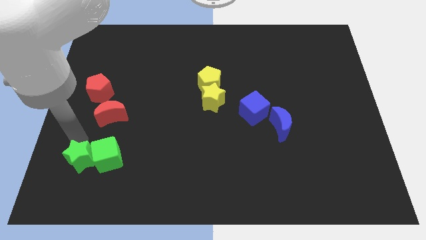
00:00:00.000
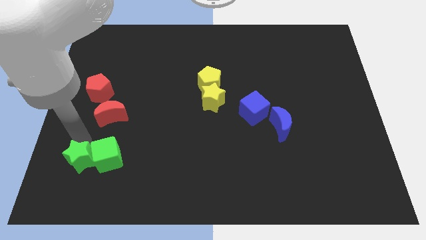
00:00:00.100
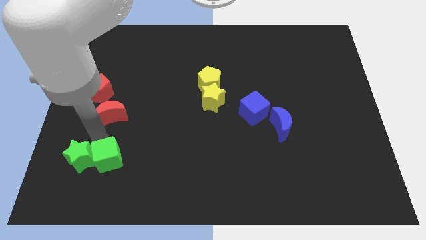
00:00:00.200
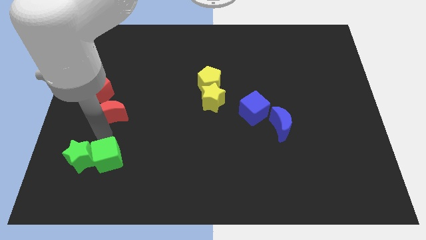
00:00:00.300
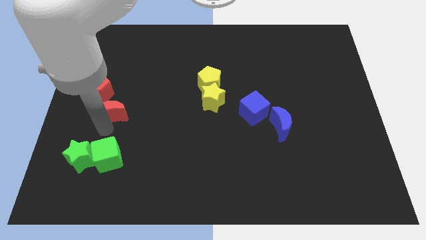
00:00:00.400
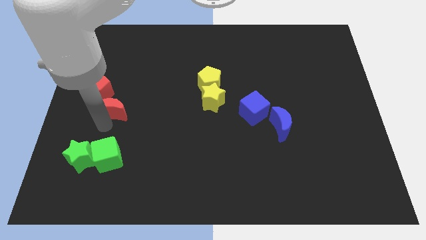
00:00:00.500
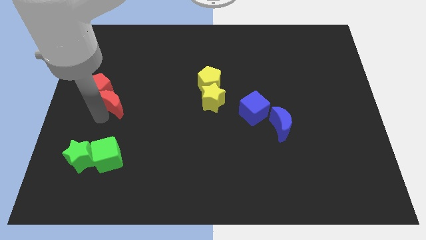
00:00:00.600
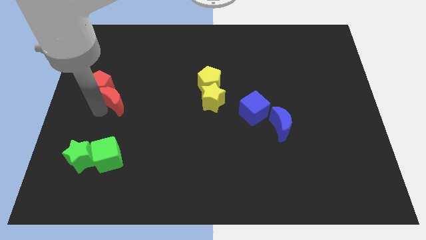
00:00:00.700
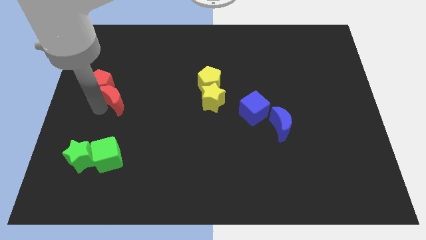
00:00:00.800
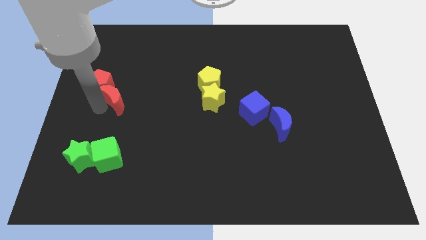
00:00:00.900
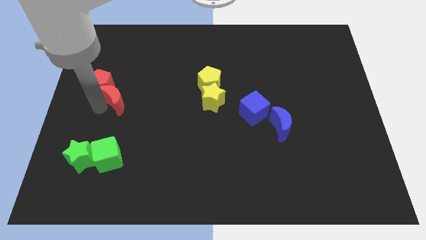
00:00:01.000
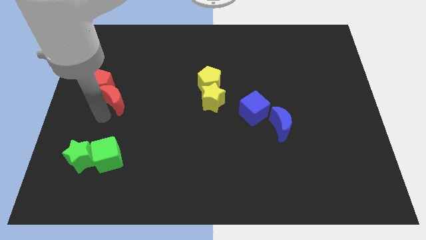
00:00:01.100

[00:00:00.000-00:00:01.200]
push the red crescent below the red pentagon

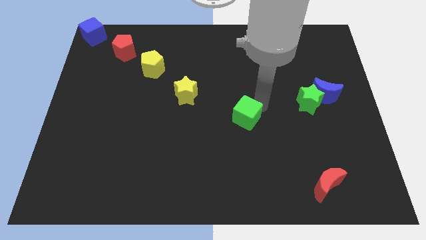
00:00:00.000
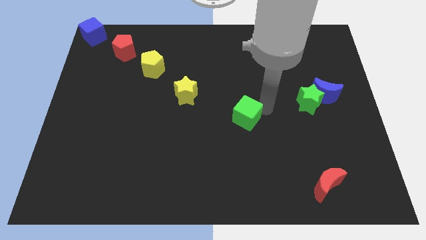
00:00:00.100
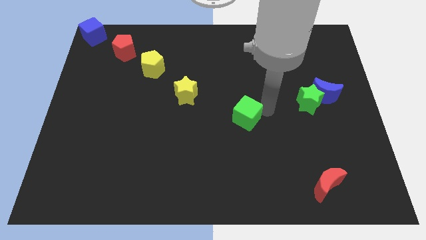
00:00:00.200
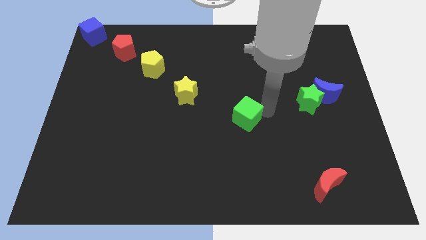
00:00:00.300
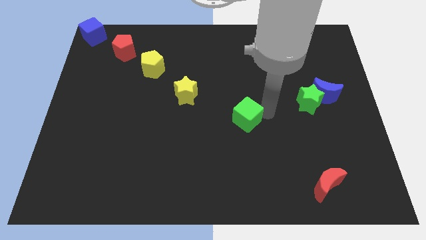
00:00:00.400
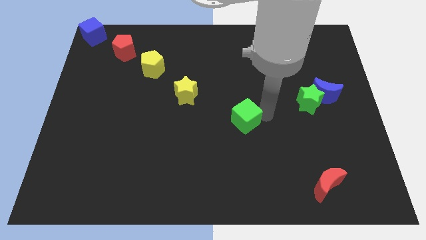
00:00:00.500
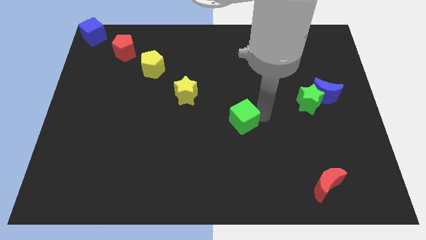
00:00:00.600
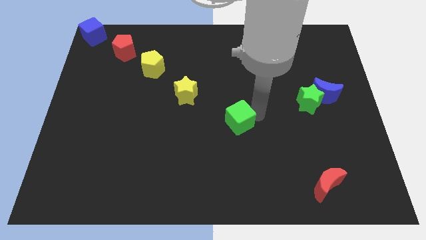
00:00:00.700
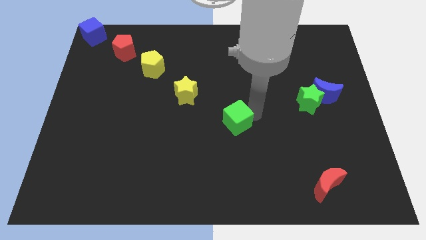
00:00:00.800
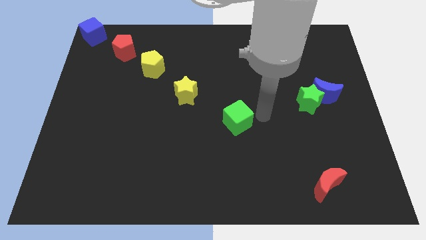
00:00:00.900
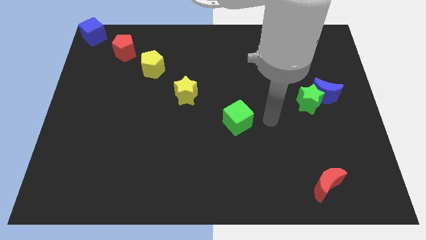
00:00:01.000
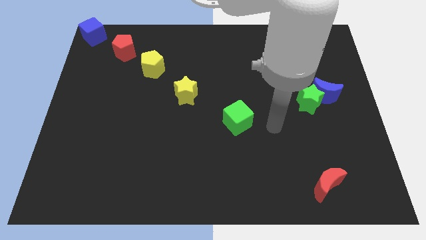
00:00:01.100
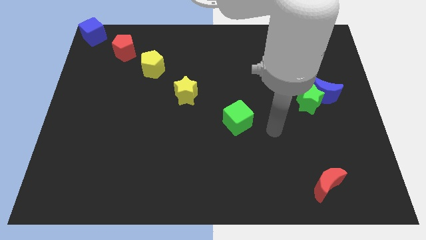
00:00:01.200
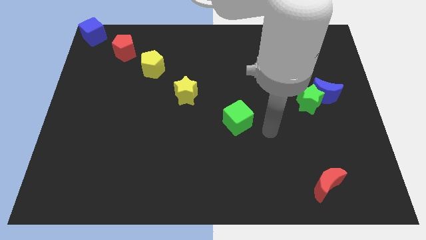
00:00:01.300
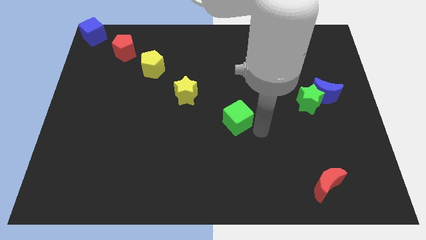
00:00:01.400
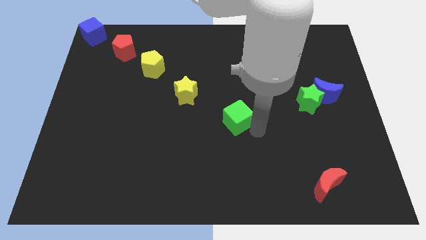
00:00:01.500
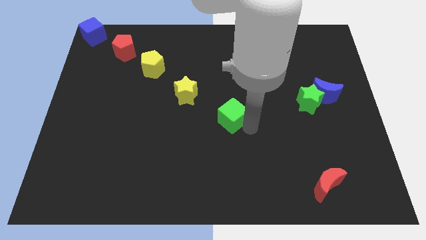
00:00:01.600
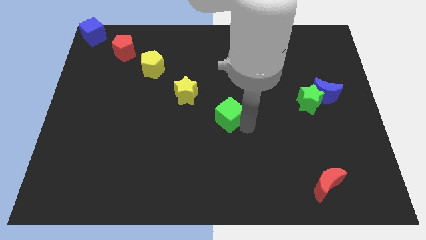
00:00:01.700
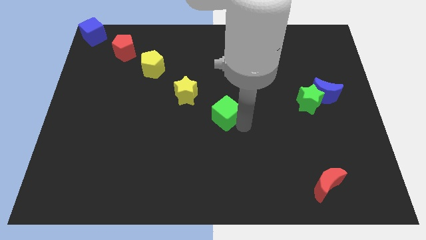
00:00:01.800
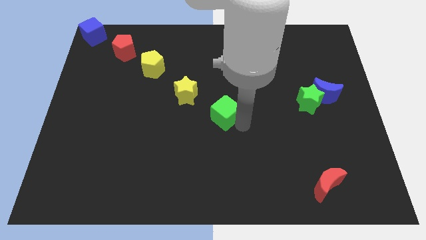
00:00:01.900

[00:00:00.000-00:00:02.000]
move the green cube near to the yellow star

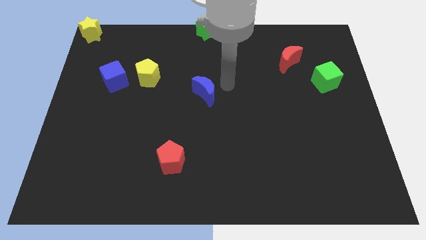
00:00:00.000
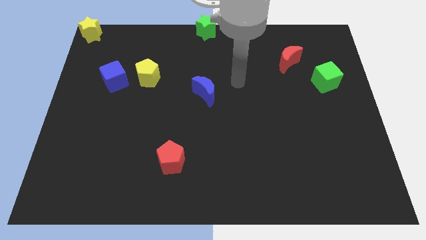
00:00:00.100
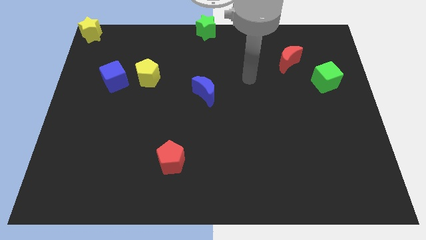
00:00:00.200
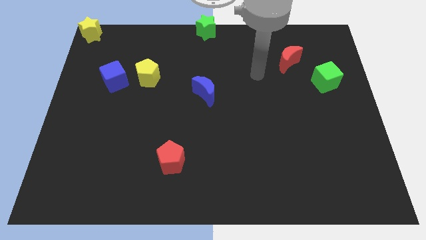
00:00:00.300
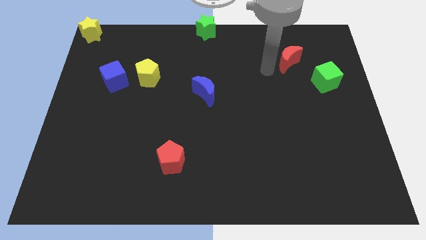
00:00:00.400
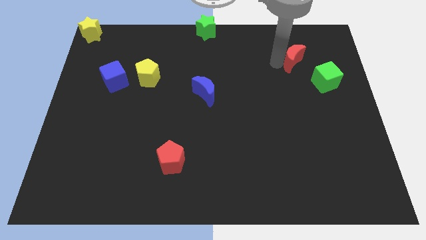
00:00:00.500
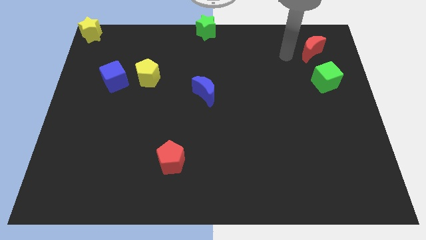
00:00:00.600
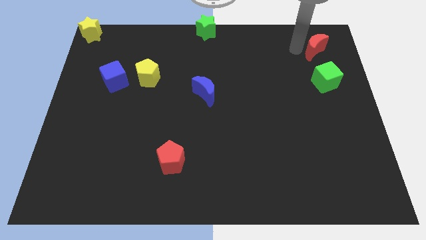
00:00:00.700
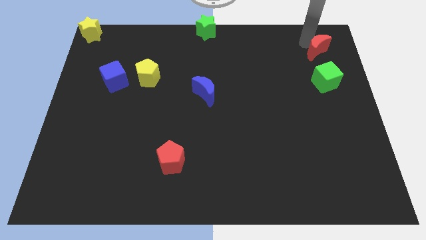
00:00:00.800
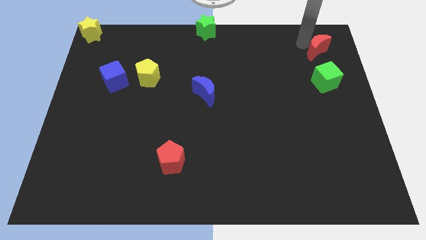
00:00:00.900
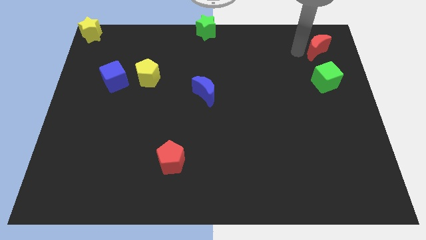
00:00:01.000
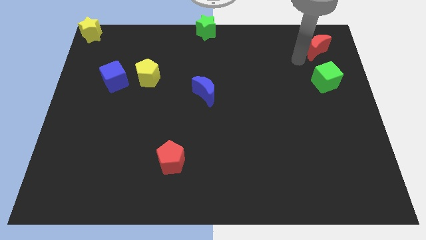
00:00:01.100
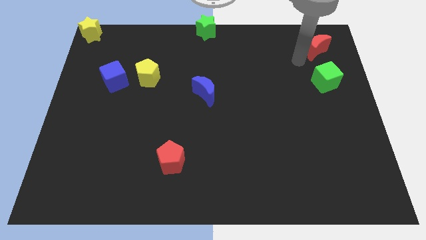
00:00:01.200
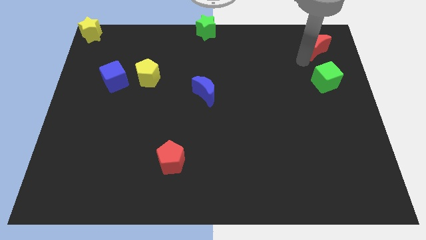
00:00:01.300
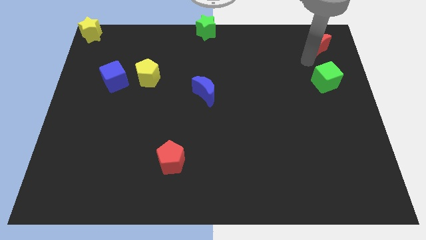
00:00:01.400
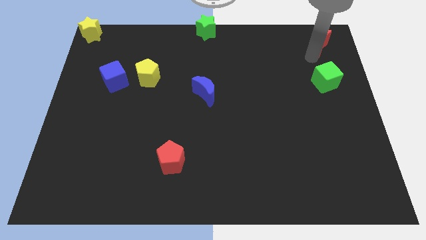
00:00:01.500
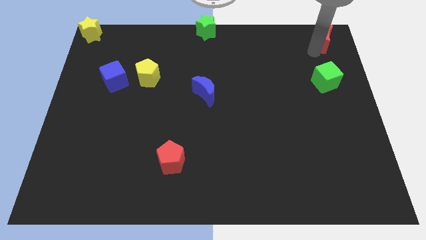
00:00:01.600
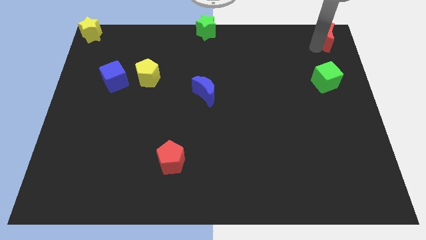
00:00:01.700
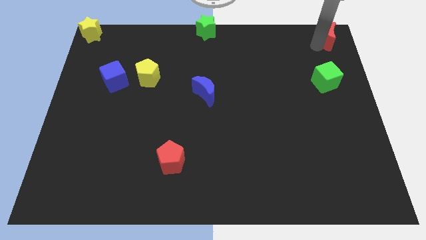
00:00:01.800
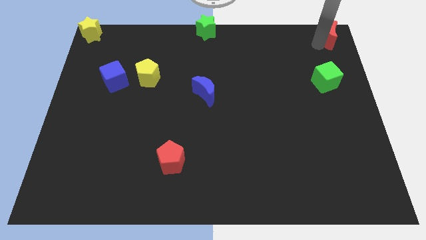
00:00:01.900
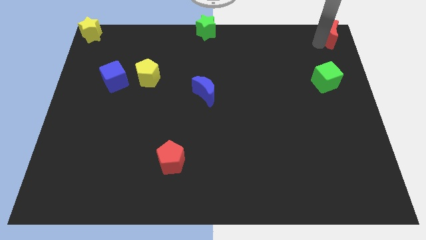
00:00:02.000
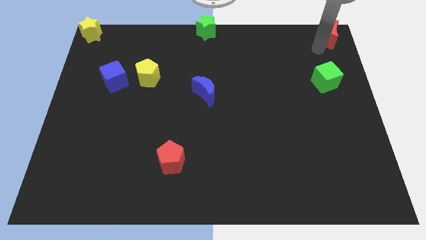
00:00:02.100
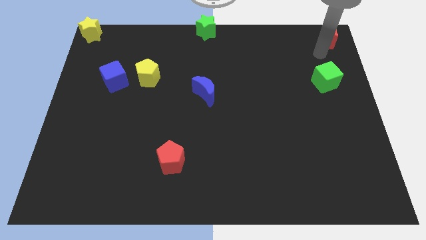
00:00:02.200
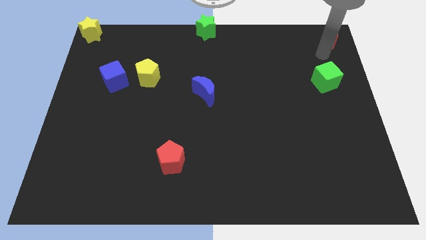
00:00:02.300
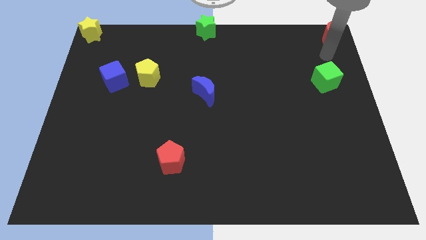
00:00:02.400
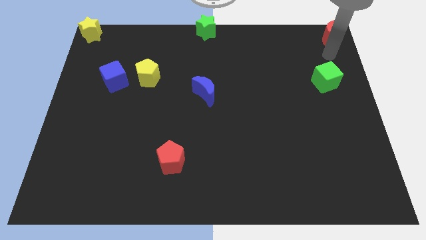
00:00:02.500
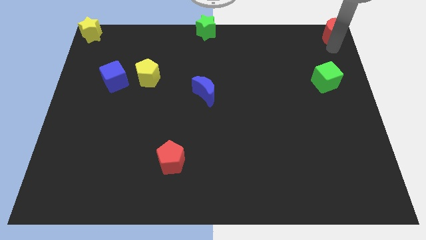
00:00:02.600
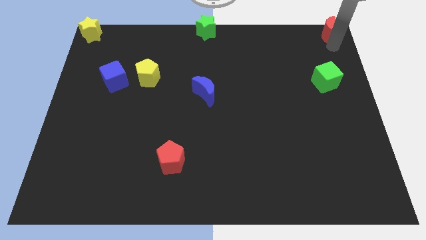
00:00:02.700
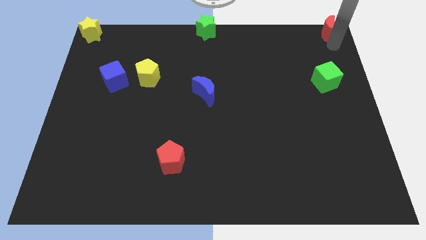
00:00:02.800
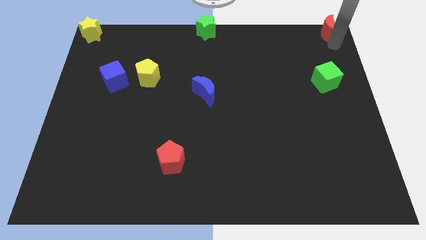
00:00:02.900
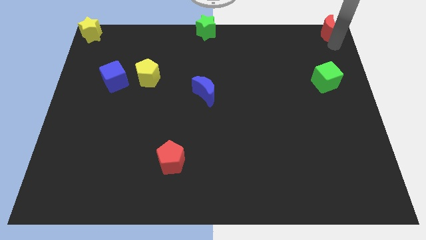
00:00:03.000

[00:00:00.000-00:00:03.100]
move the red moon towards the top right corner

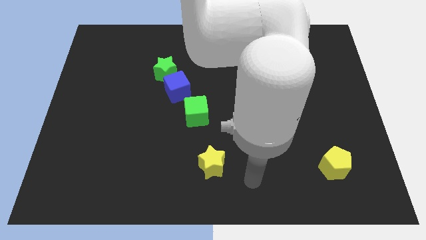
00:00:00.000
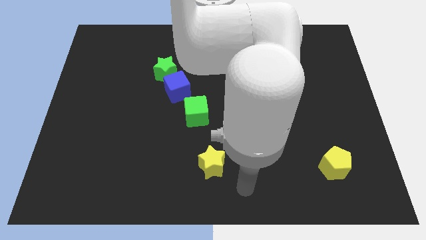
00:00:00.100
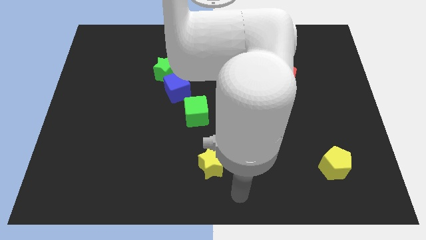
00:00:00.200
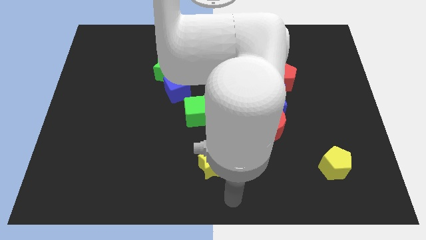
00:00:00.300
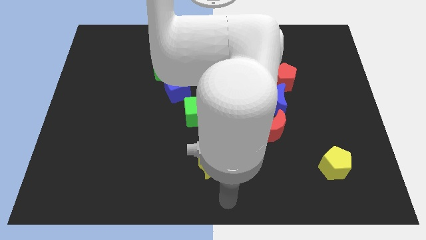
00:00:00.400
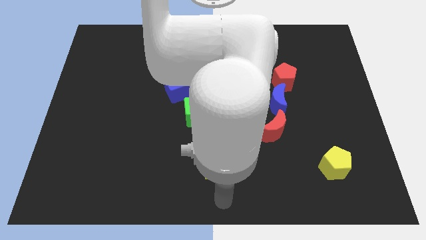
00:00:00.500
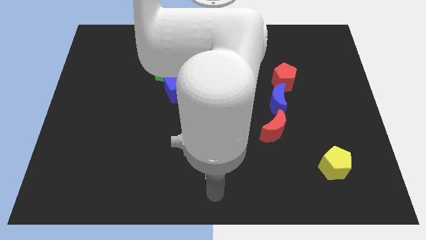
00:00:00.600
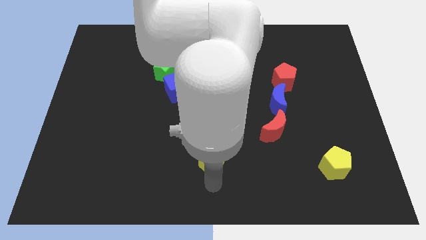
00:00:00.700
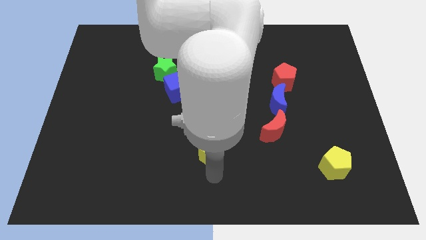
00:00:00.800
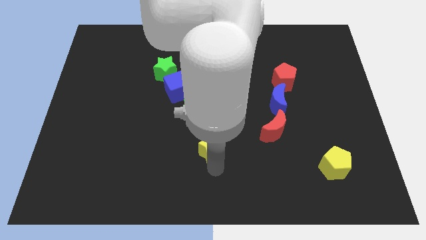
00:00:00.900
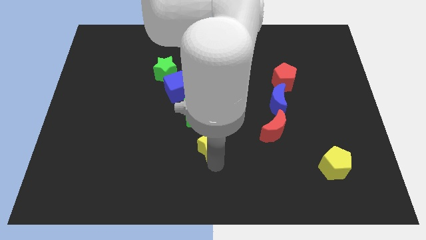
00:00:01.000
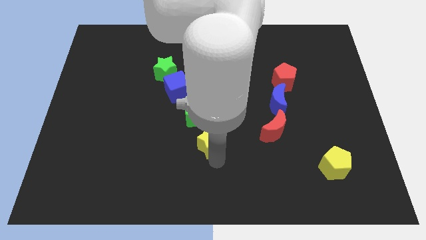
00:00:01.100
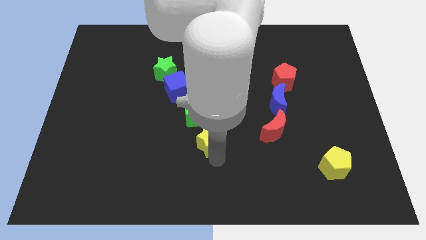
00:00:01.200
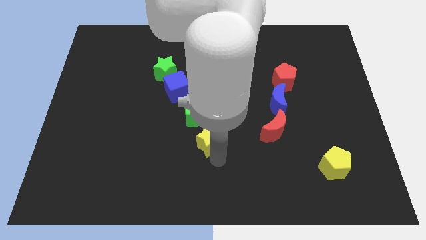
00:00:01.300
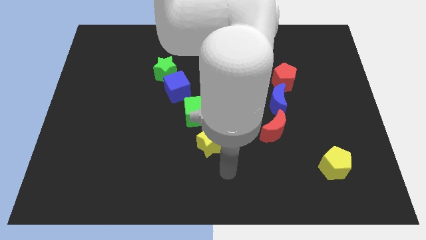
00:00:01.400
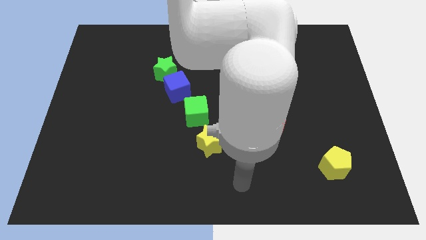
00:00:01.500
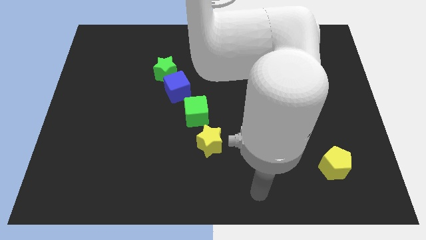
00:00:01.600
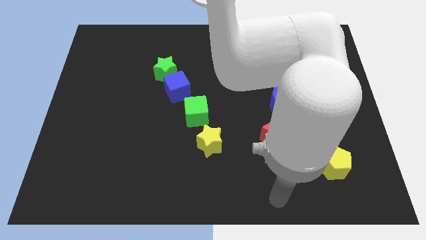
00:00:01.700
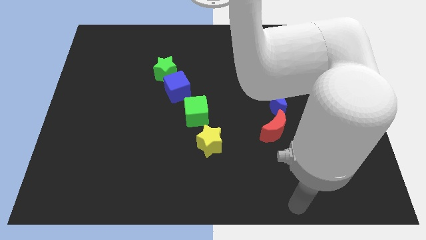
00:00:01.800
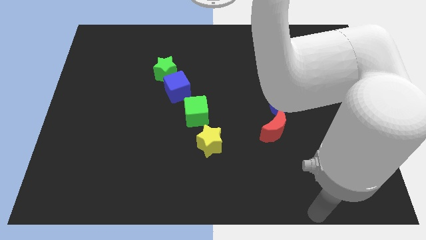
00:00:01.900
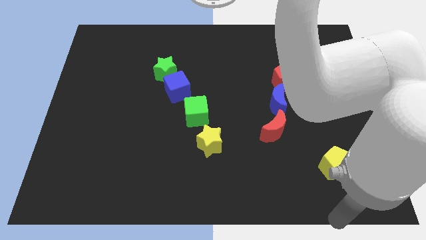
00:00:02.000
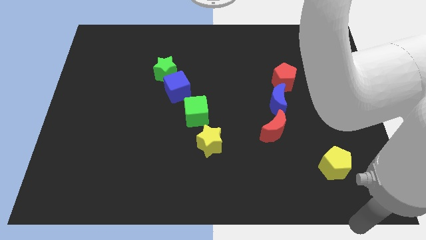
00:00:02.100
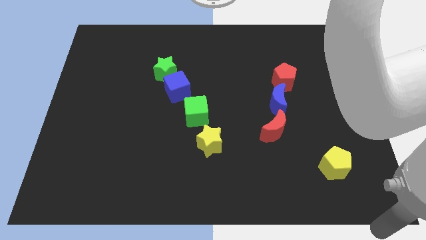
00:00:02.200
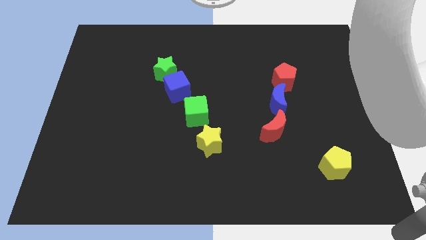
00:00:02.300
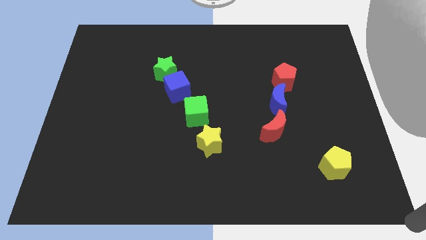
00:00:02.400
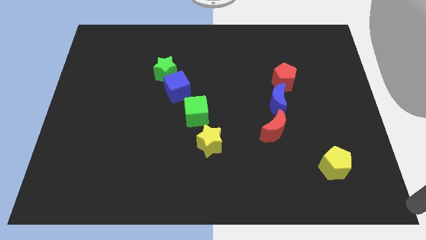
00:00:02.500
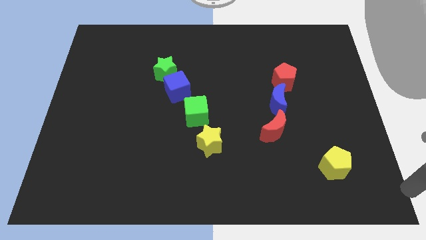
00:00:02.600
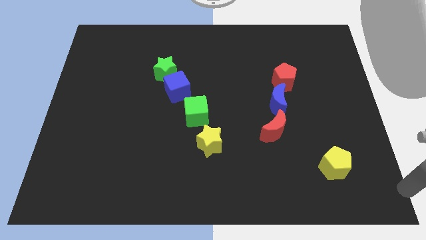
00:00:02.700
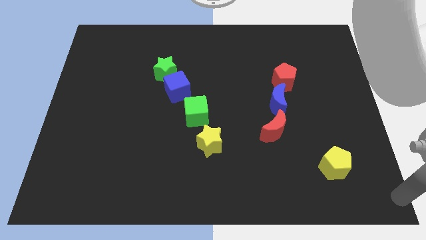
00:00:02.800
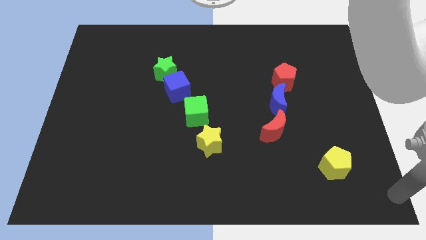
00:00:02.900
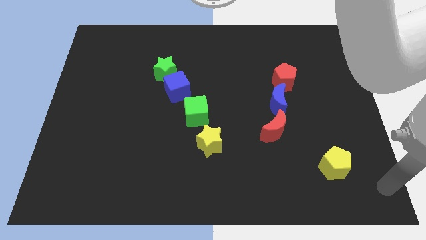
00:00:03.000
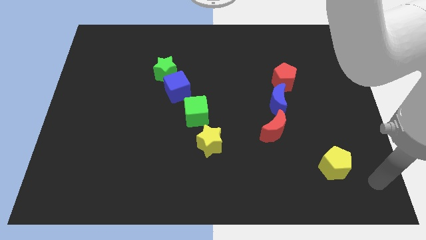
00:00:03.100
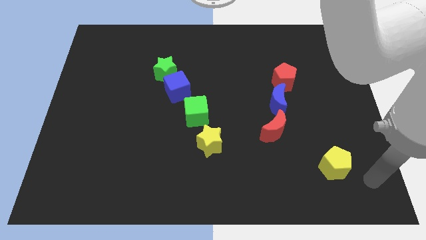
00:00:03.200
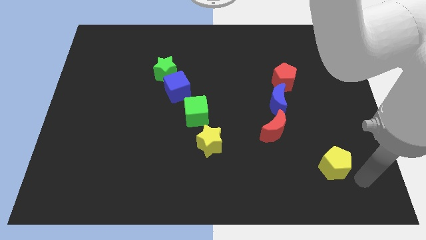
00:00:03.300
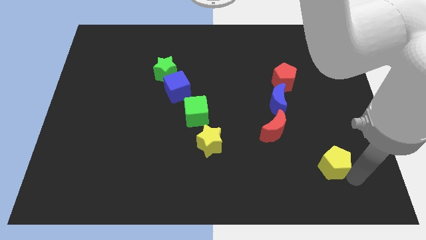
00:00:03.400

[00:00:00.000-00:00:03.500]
move yellow star close to the green cube
